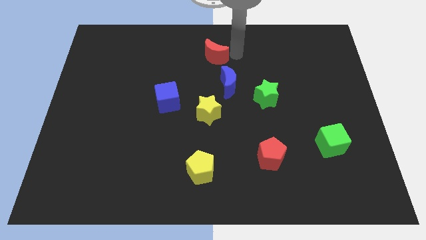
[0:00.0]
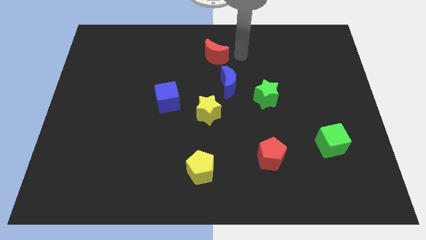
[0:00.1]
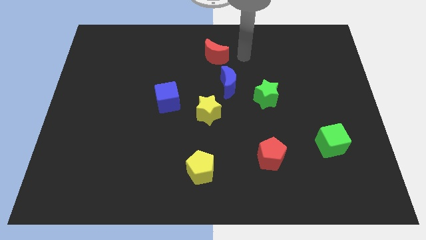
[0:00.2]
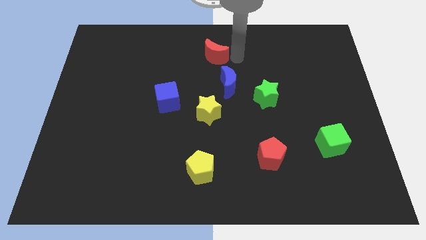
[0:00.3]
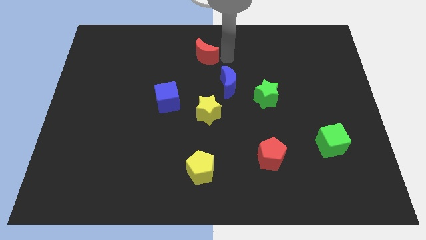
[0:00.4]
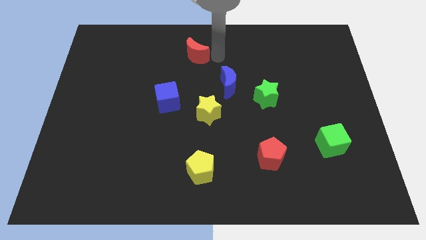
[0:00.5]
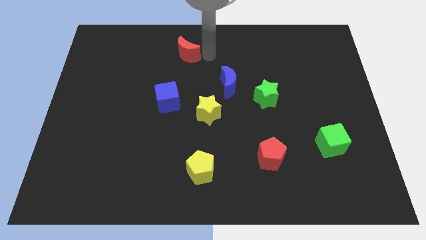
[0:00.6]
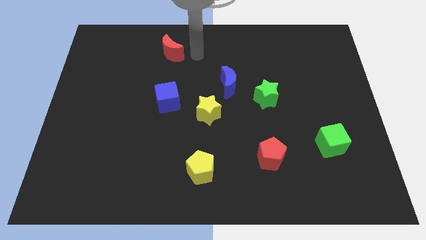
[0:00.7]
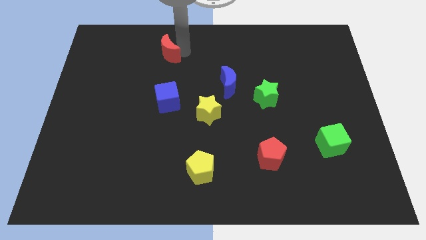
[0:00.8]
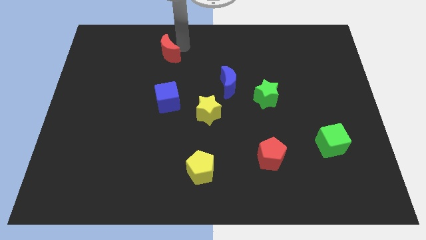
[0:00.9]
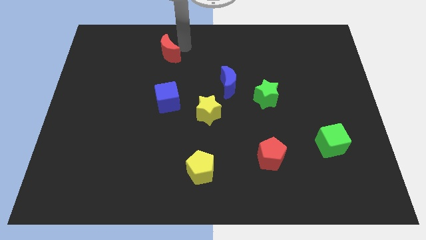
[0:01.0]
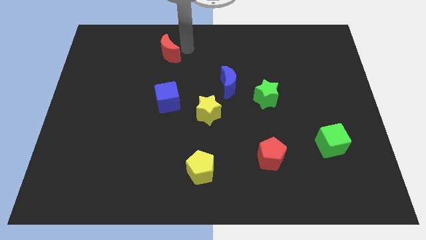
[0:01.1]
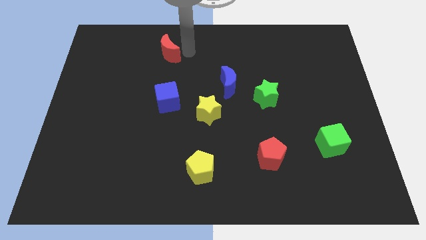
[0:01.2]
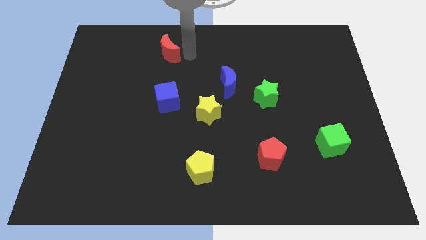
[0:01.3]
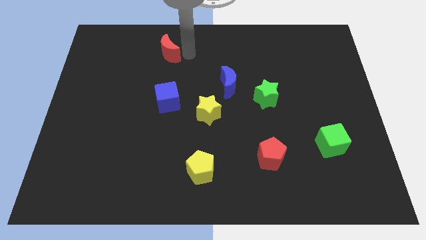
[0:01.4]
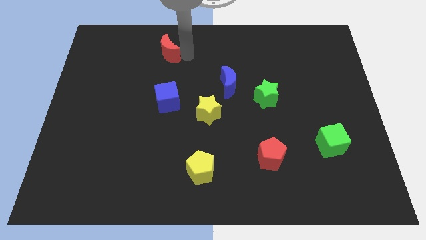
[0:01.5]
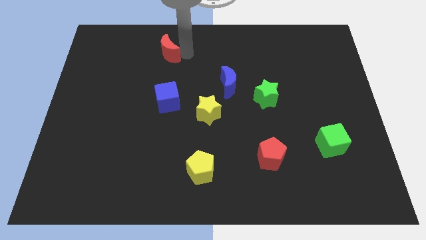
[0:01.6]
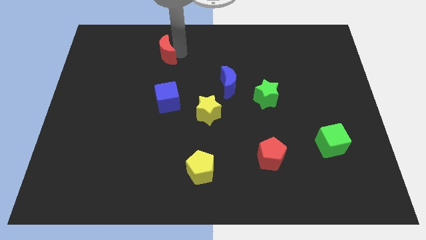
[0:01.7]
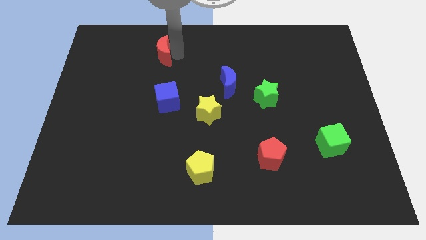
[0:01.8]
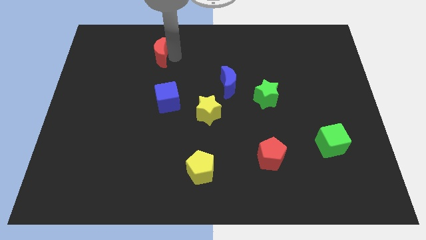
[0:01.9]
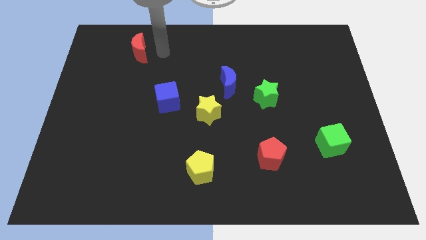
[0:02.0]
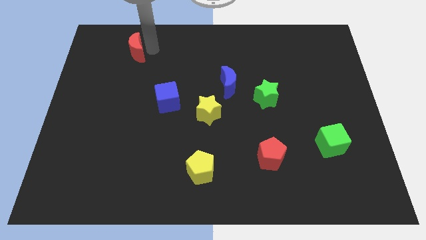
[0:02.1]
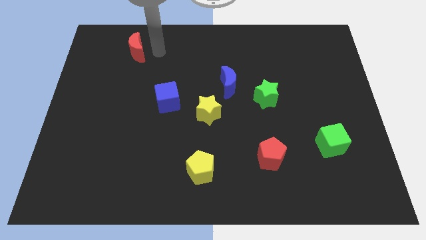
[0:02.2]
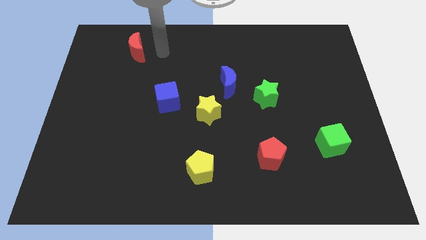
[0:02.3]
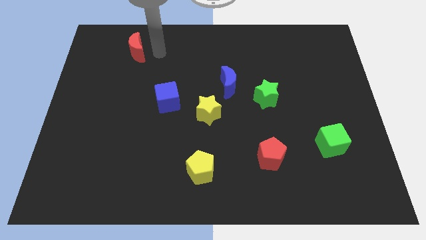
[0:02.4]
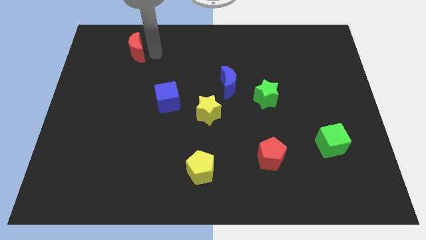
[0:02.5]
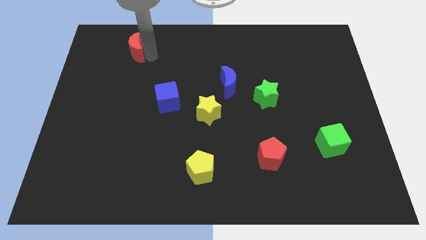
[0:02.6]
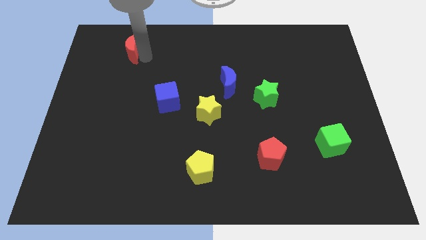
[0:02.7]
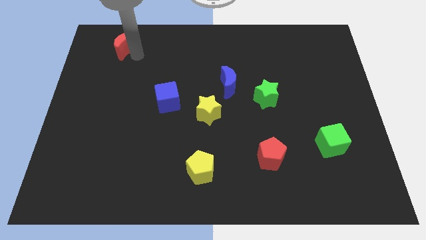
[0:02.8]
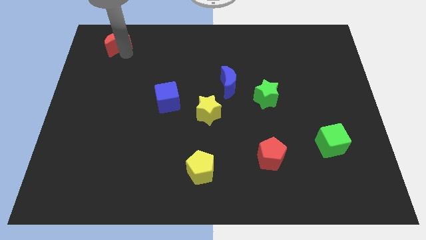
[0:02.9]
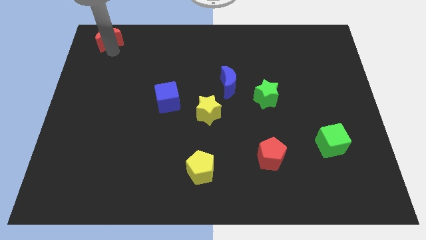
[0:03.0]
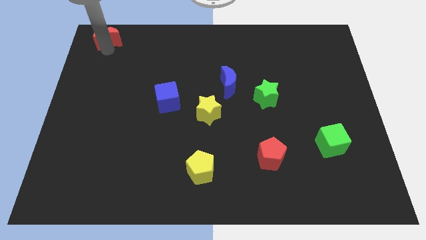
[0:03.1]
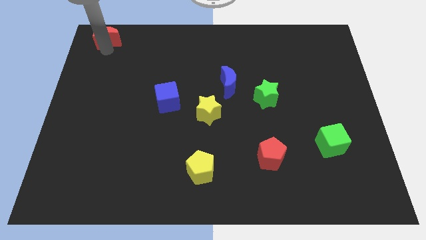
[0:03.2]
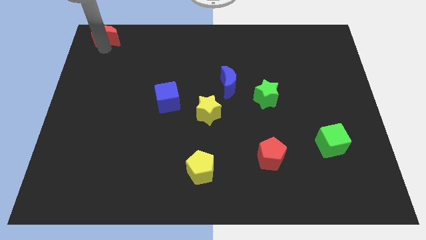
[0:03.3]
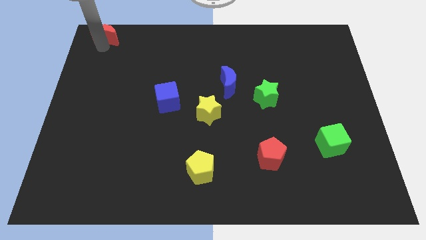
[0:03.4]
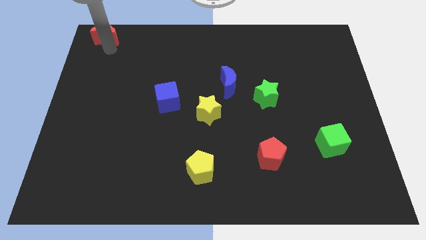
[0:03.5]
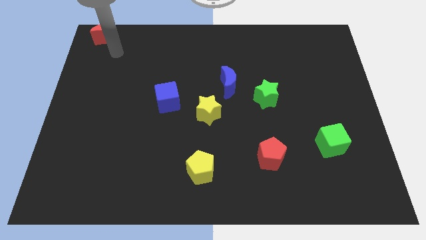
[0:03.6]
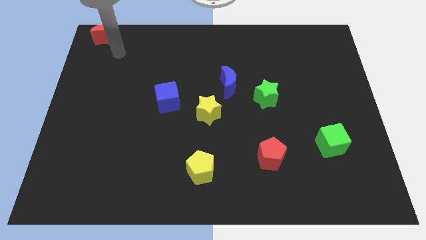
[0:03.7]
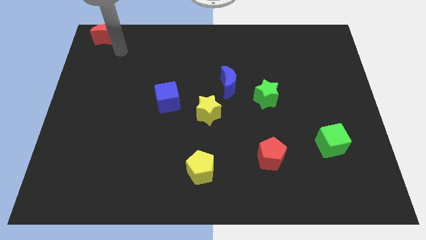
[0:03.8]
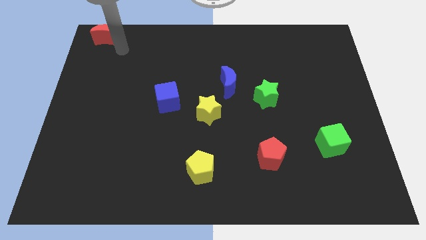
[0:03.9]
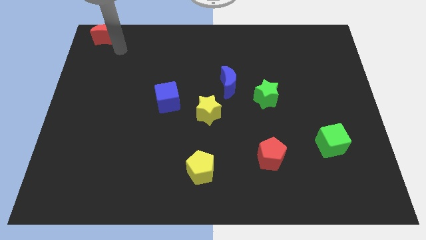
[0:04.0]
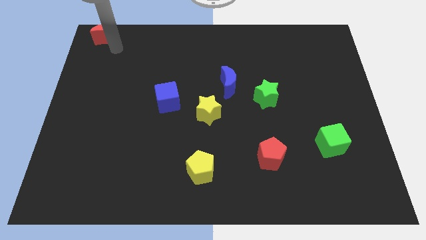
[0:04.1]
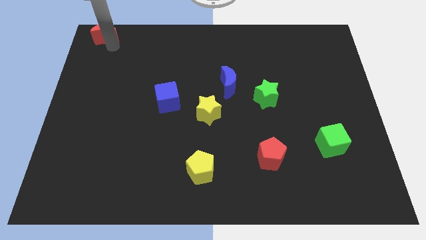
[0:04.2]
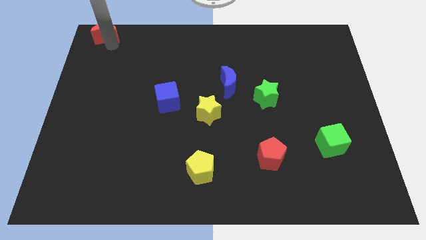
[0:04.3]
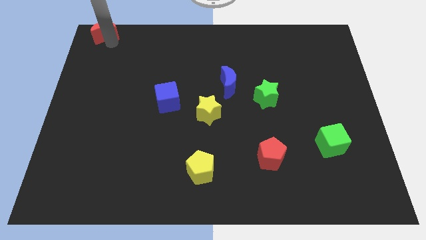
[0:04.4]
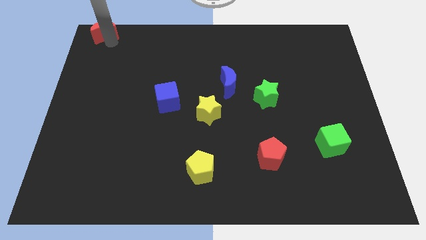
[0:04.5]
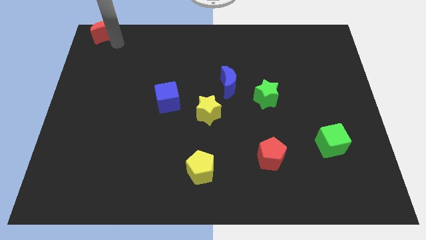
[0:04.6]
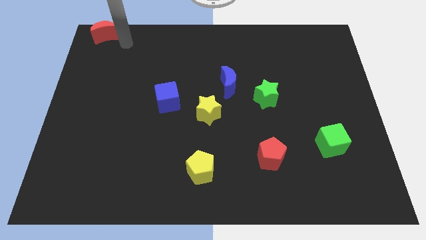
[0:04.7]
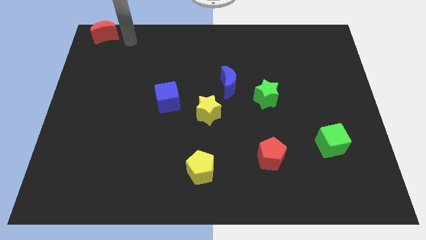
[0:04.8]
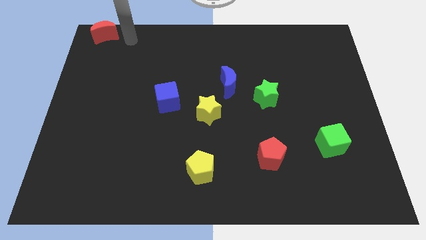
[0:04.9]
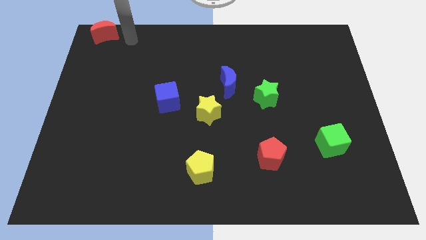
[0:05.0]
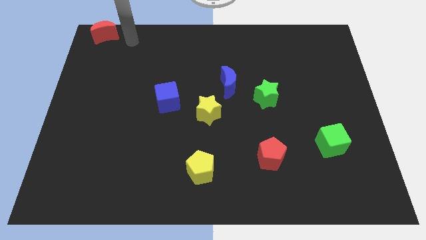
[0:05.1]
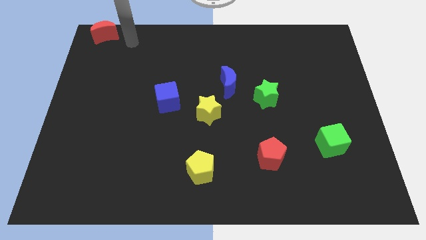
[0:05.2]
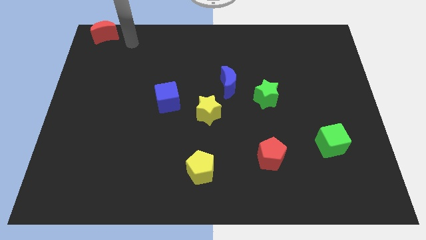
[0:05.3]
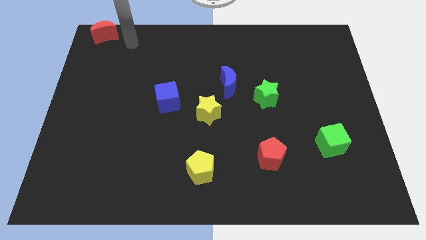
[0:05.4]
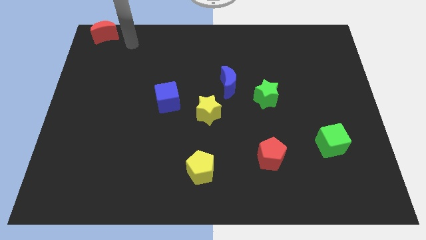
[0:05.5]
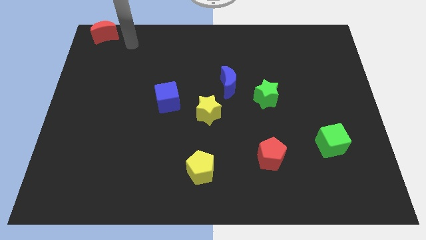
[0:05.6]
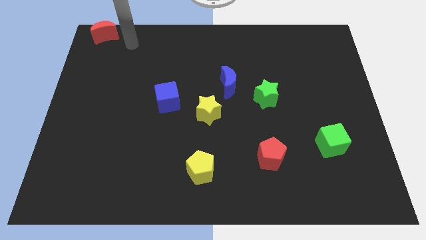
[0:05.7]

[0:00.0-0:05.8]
move the red crescent to the top left corner of the board

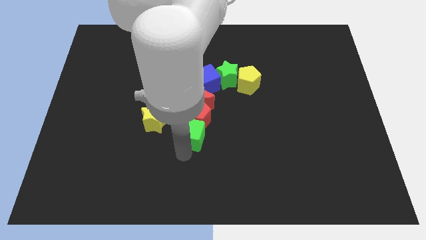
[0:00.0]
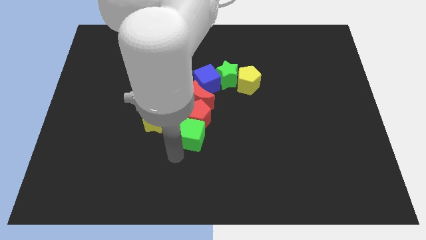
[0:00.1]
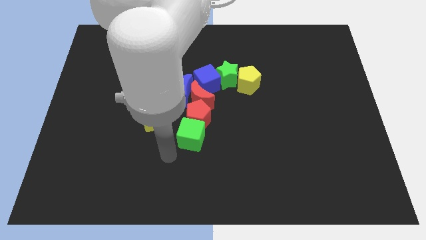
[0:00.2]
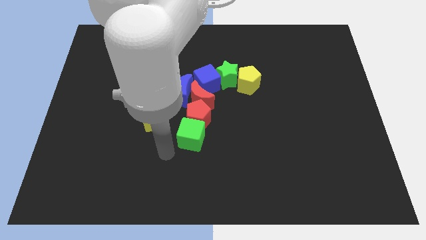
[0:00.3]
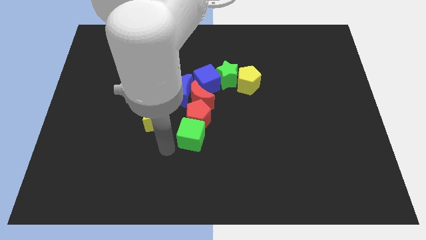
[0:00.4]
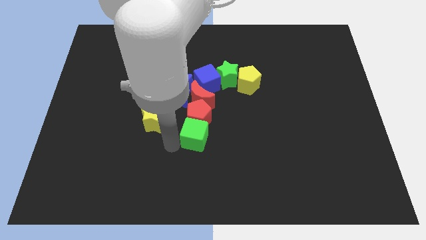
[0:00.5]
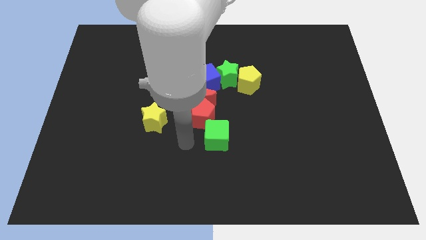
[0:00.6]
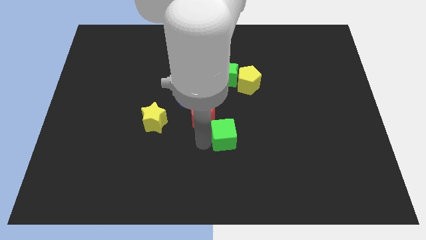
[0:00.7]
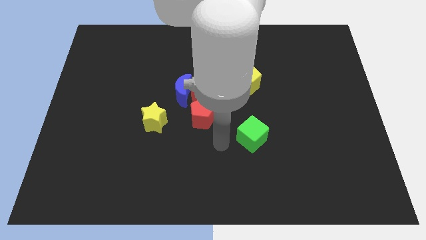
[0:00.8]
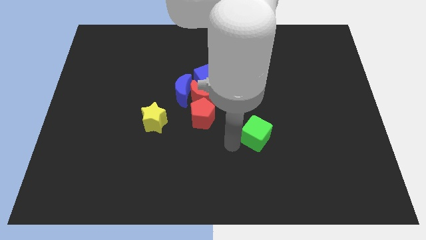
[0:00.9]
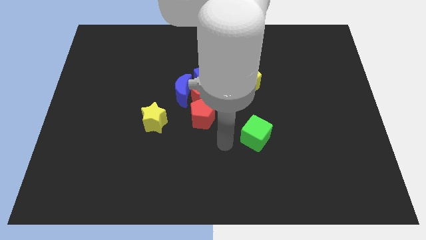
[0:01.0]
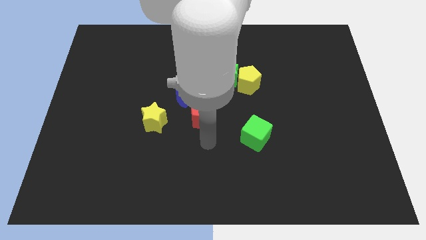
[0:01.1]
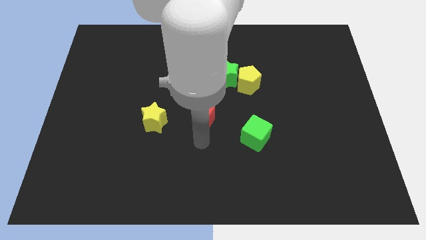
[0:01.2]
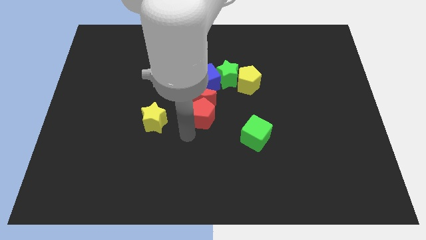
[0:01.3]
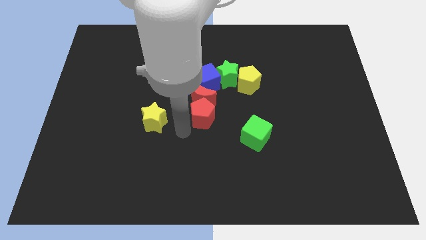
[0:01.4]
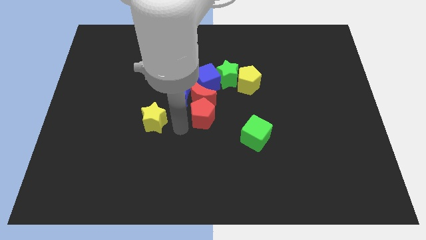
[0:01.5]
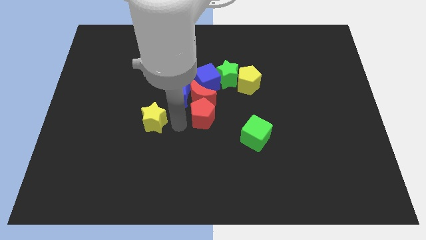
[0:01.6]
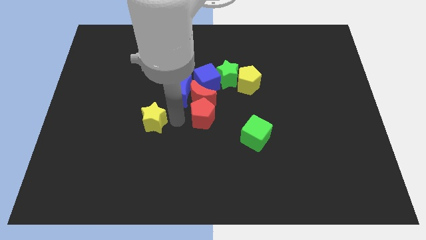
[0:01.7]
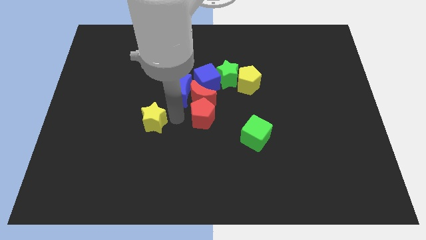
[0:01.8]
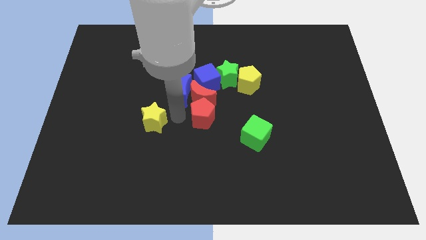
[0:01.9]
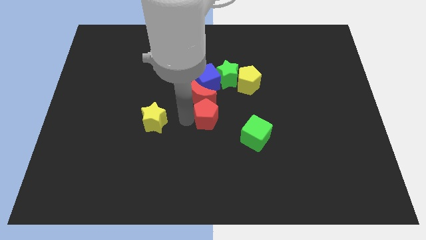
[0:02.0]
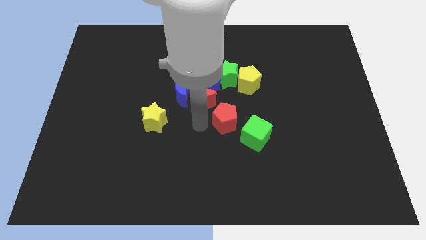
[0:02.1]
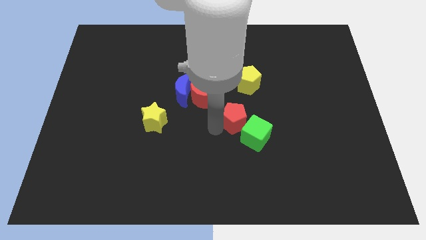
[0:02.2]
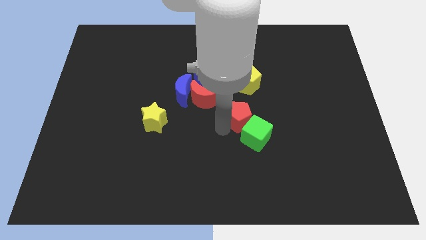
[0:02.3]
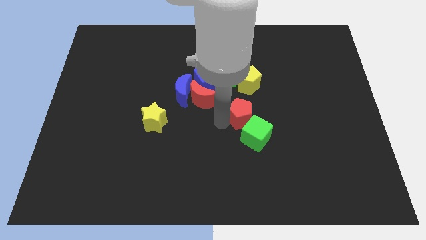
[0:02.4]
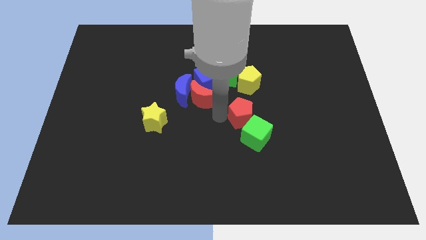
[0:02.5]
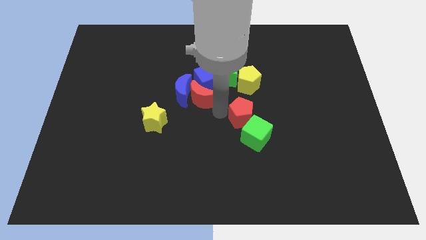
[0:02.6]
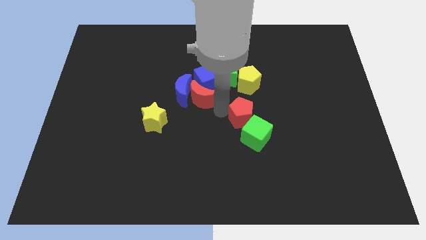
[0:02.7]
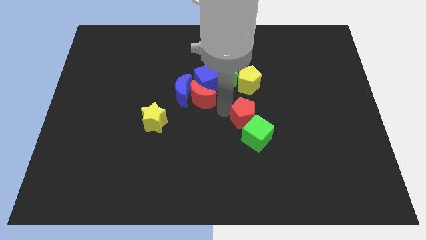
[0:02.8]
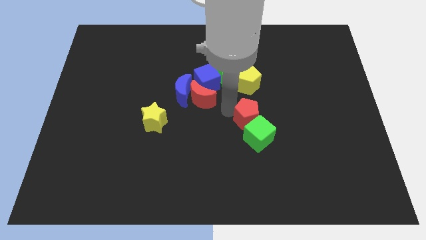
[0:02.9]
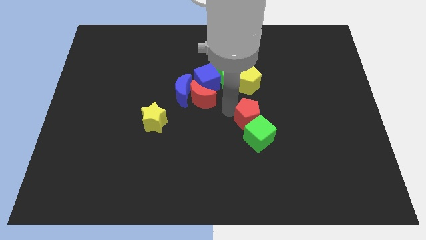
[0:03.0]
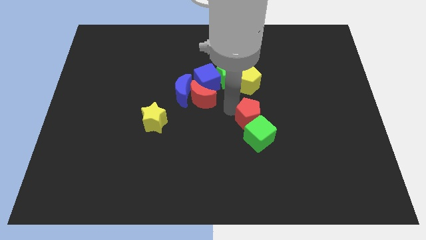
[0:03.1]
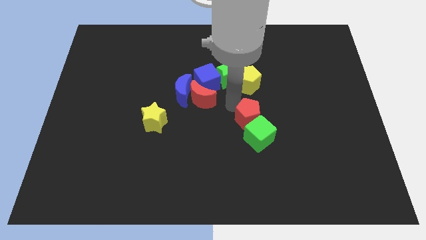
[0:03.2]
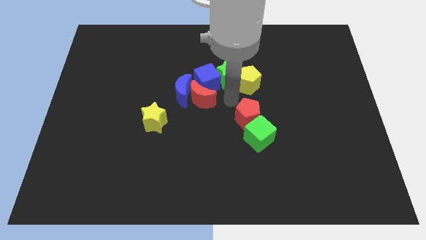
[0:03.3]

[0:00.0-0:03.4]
place the red pentagon down to the yellow pentagon
